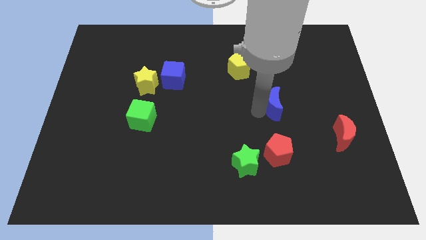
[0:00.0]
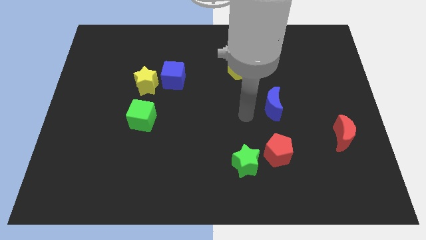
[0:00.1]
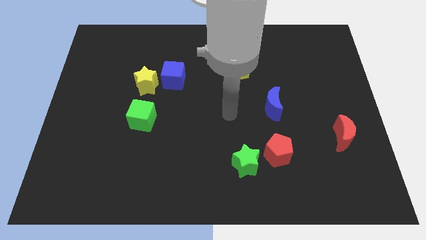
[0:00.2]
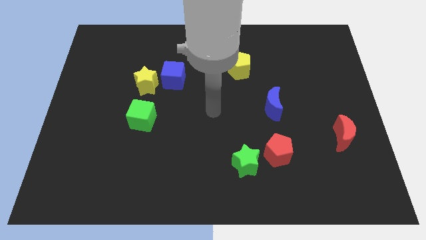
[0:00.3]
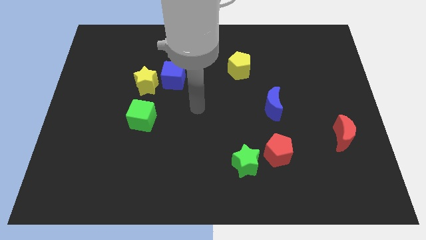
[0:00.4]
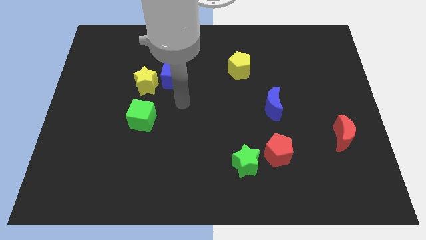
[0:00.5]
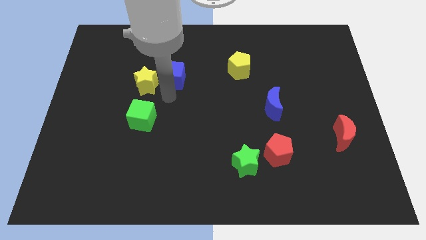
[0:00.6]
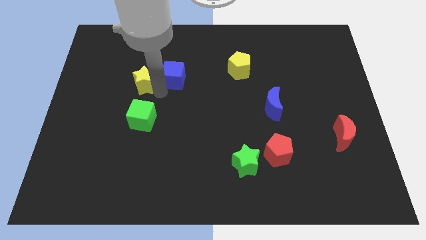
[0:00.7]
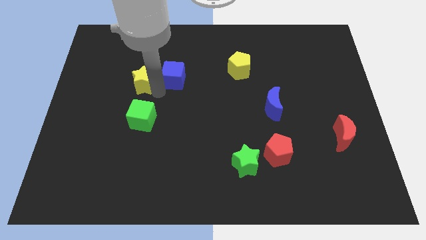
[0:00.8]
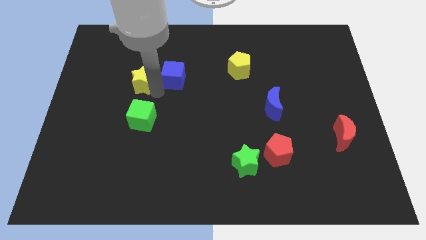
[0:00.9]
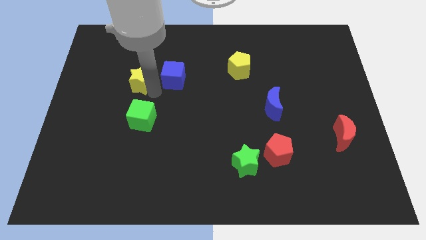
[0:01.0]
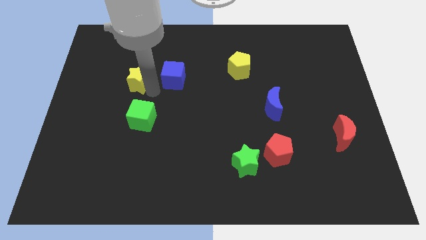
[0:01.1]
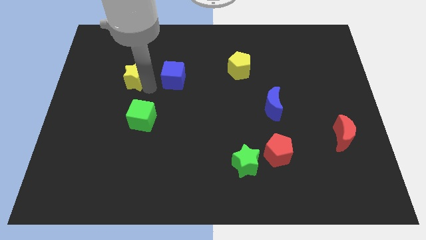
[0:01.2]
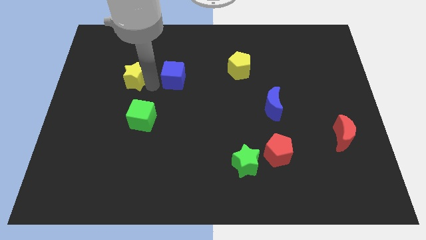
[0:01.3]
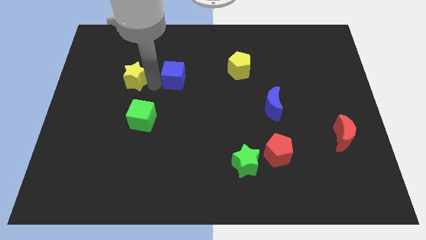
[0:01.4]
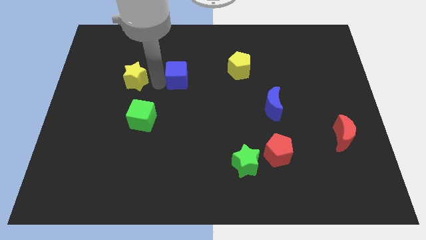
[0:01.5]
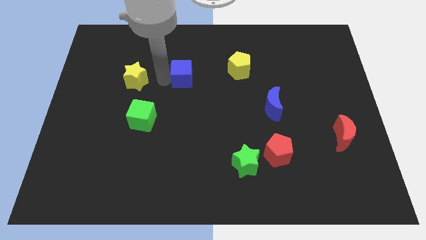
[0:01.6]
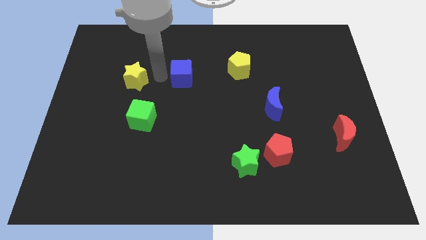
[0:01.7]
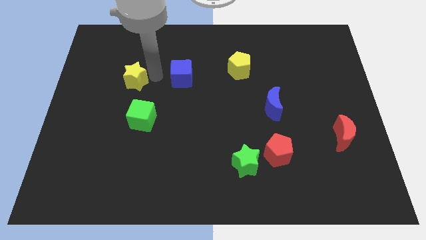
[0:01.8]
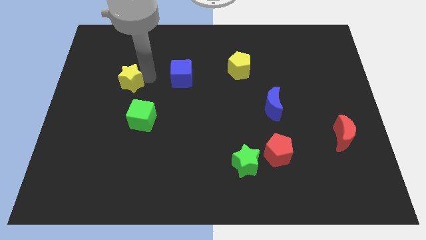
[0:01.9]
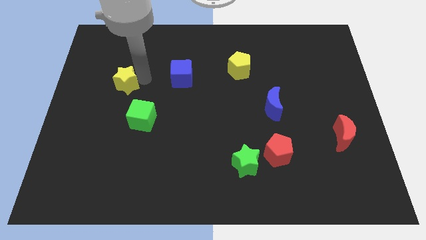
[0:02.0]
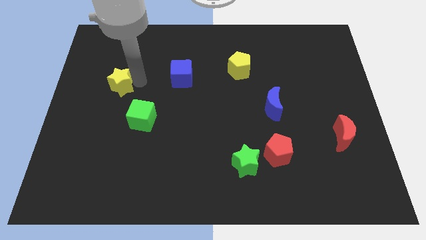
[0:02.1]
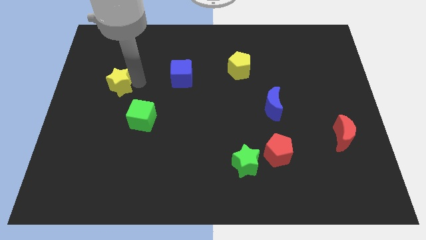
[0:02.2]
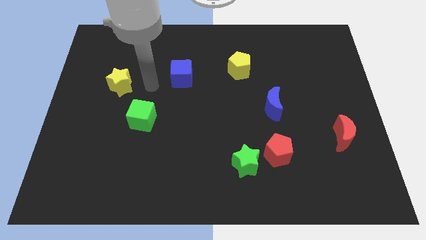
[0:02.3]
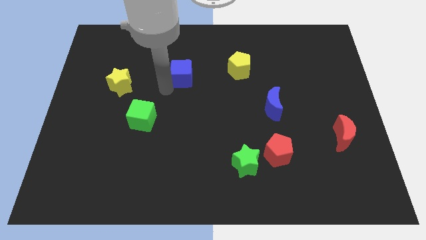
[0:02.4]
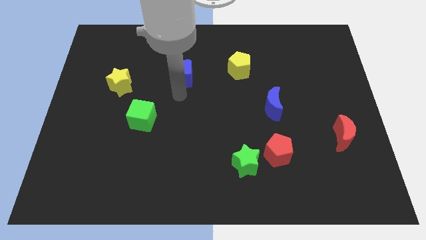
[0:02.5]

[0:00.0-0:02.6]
move the yellow star diagonal to the green cube

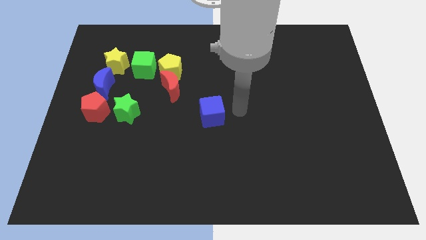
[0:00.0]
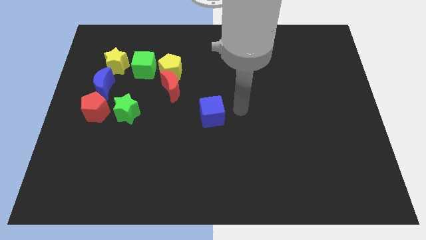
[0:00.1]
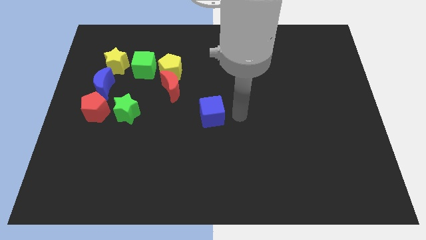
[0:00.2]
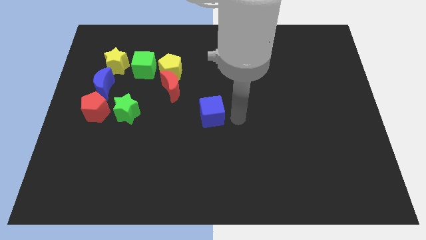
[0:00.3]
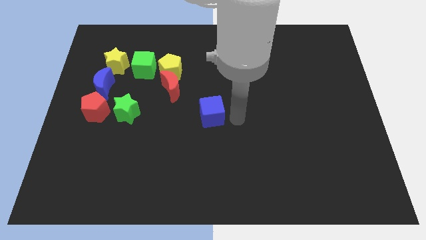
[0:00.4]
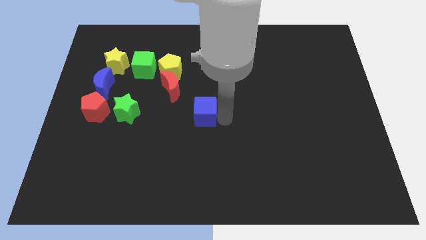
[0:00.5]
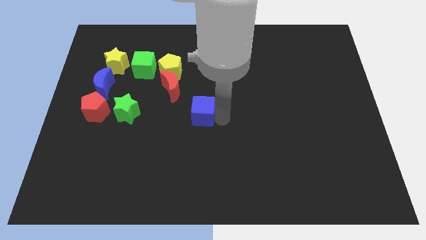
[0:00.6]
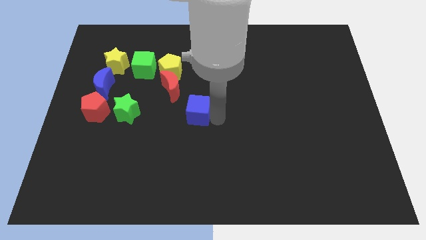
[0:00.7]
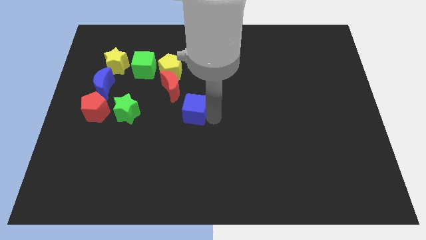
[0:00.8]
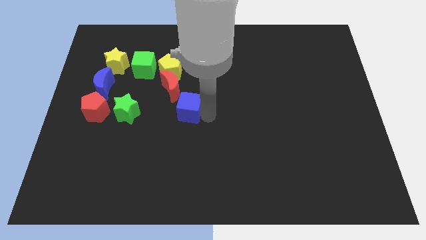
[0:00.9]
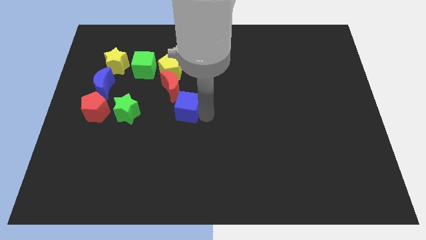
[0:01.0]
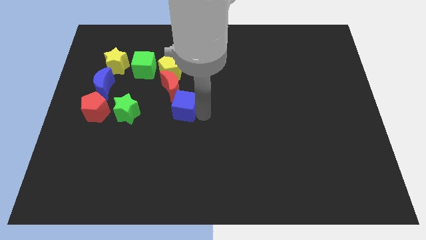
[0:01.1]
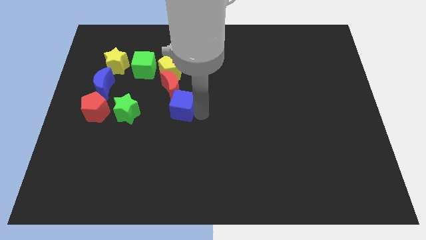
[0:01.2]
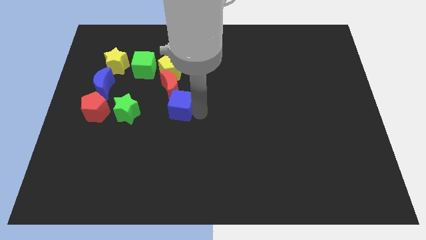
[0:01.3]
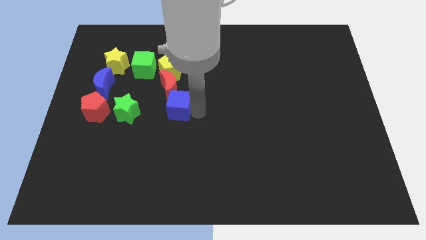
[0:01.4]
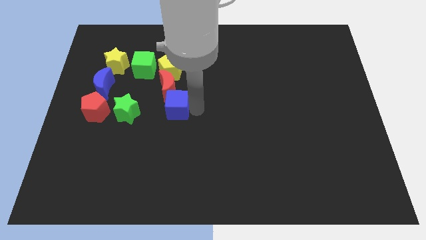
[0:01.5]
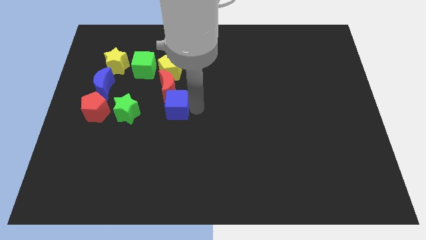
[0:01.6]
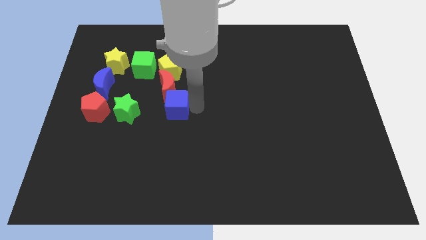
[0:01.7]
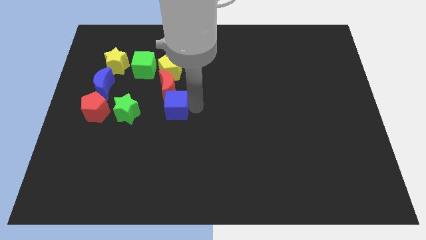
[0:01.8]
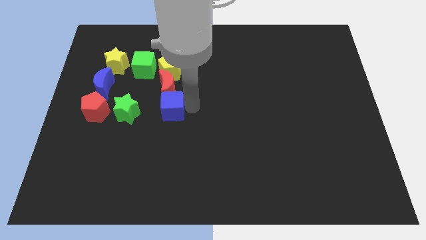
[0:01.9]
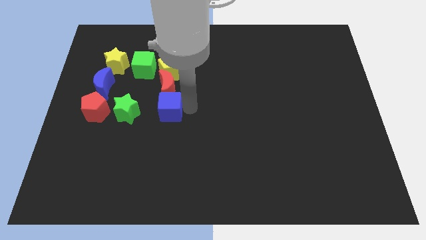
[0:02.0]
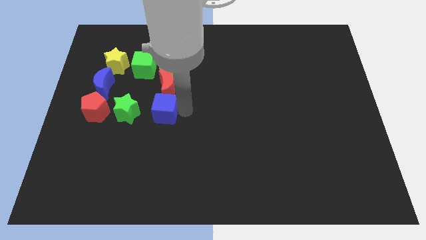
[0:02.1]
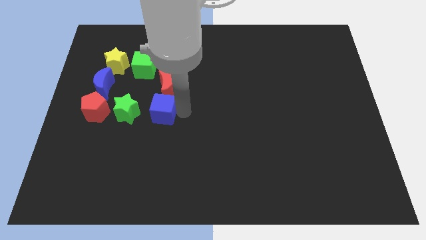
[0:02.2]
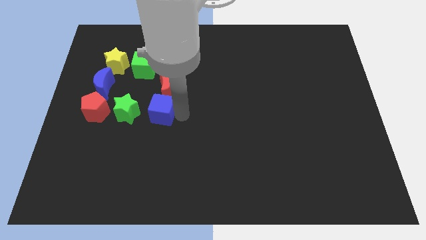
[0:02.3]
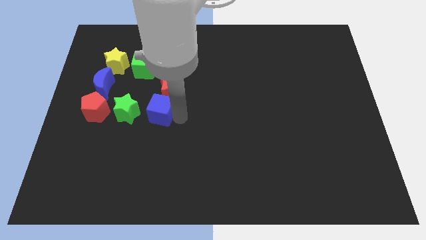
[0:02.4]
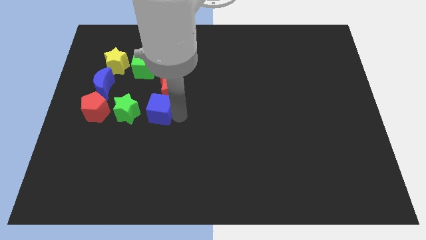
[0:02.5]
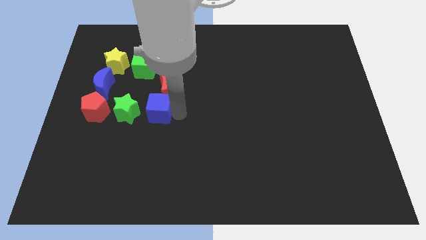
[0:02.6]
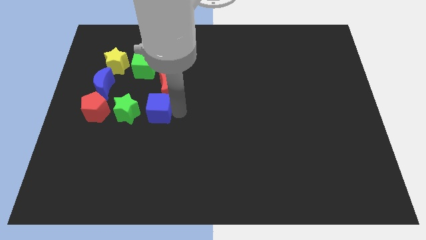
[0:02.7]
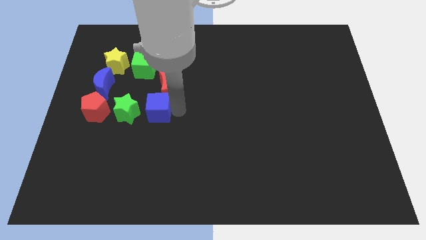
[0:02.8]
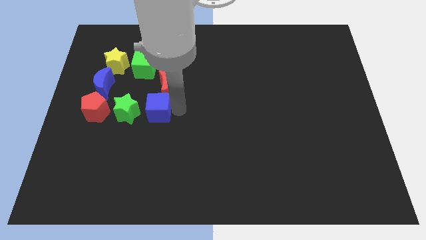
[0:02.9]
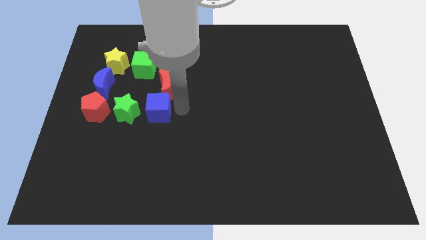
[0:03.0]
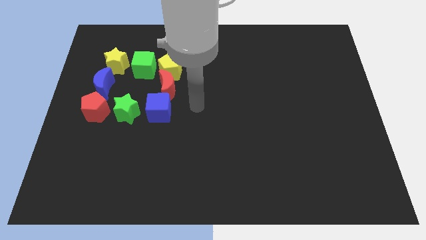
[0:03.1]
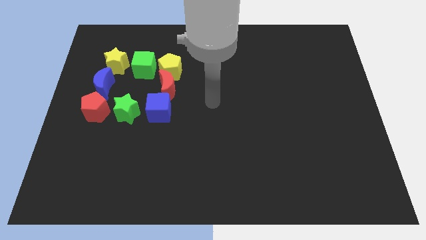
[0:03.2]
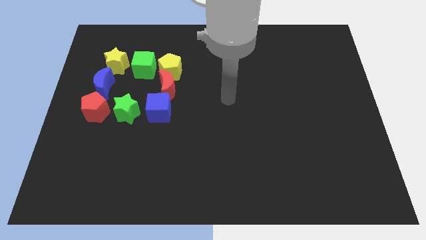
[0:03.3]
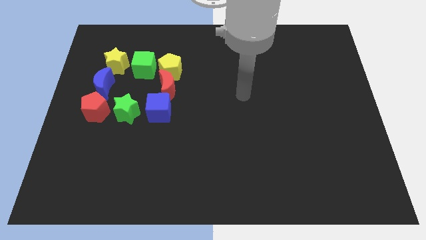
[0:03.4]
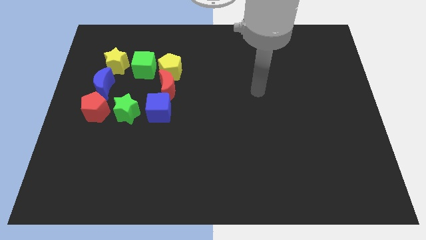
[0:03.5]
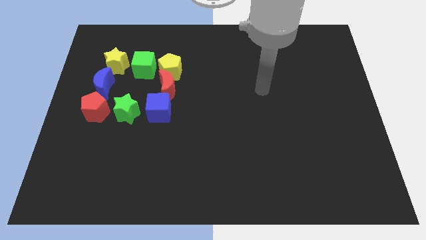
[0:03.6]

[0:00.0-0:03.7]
slide the blue cube vertically below the red crescent

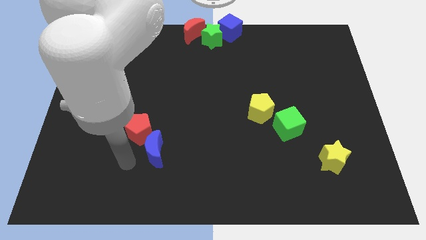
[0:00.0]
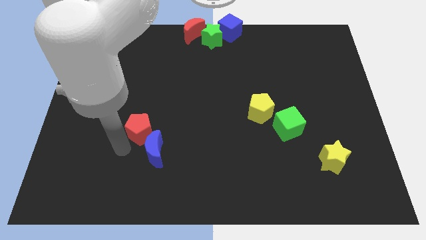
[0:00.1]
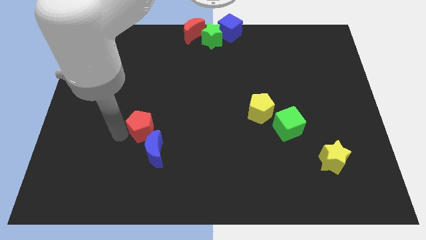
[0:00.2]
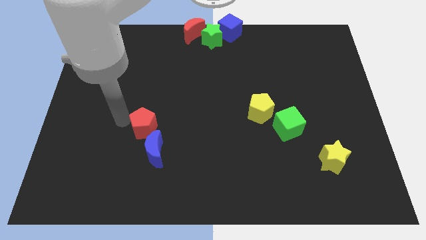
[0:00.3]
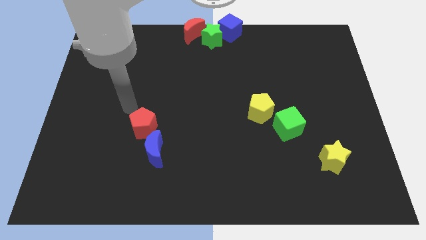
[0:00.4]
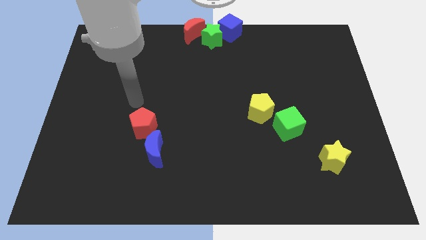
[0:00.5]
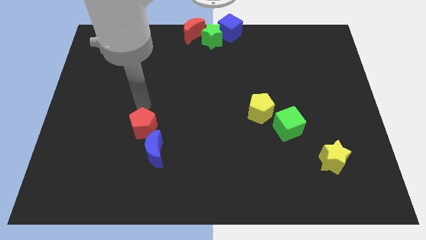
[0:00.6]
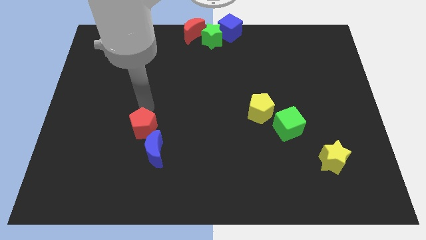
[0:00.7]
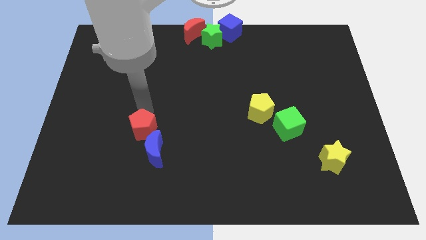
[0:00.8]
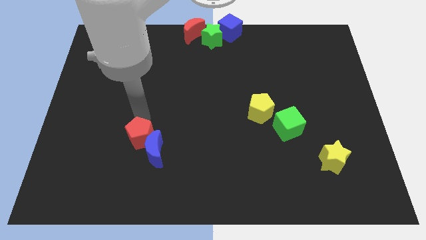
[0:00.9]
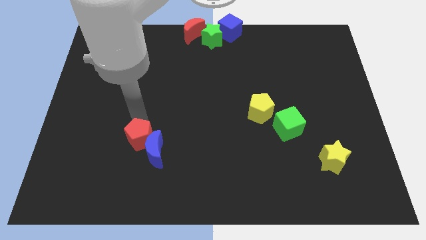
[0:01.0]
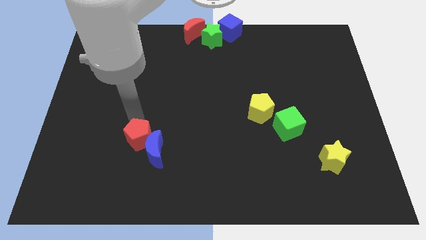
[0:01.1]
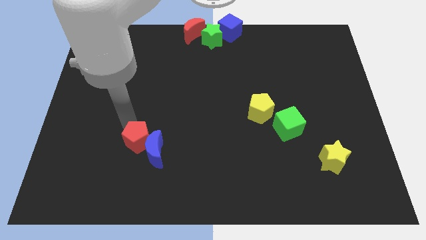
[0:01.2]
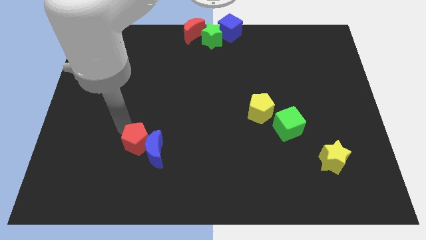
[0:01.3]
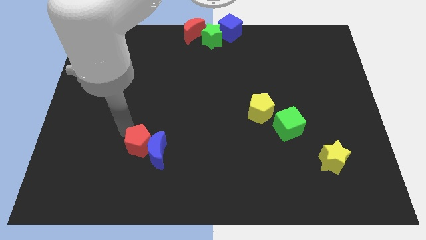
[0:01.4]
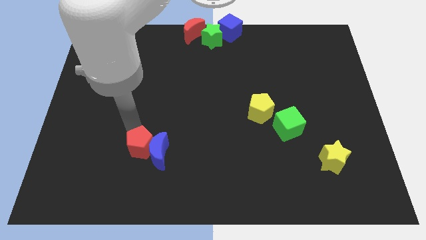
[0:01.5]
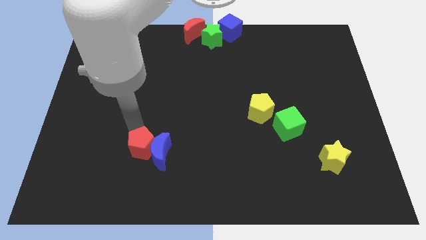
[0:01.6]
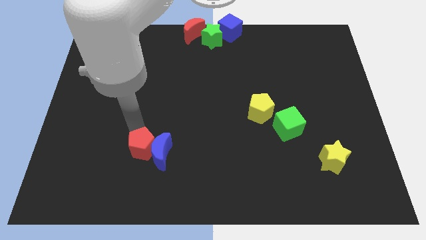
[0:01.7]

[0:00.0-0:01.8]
place red pentagon to the left side of blue moon

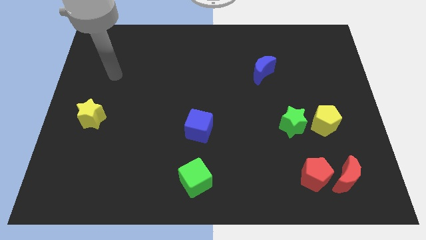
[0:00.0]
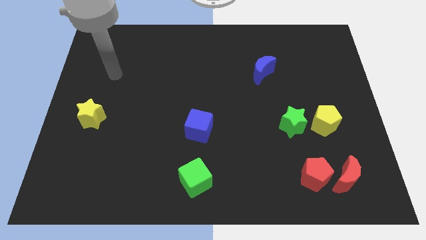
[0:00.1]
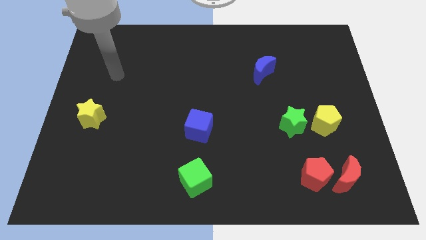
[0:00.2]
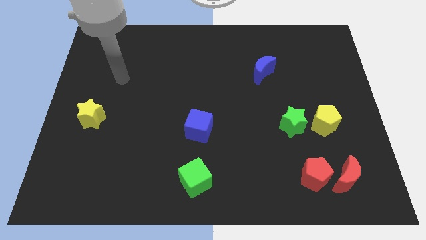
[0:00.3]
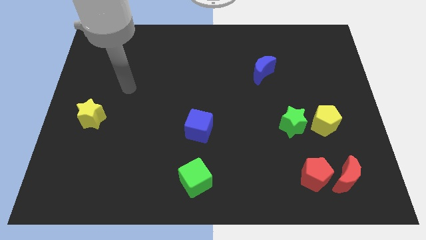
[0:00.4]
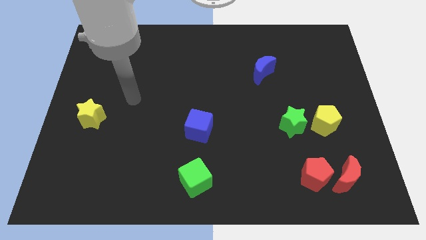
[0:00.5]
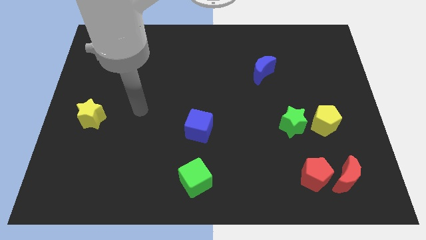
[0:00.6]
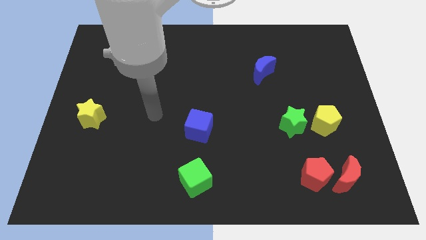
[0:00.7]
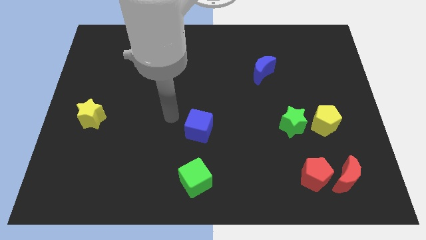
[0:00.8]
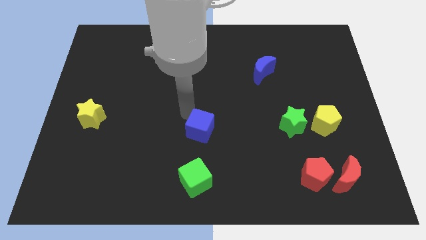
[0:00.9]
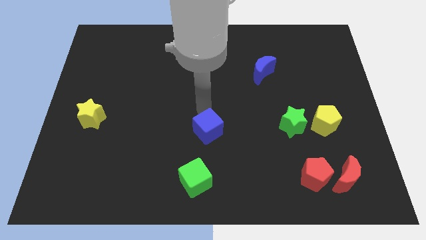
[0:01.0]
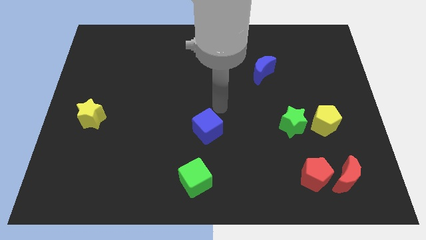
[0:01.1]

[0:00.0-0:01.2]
tap the blue cube
